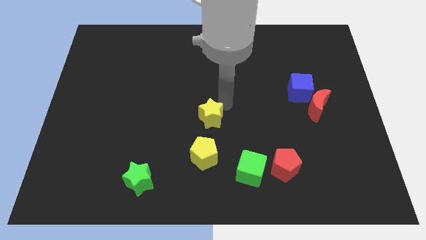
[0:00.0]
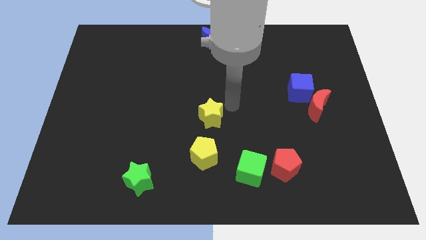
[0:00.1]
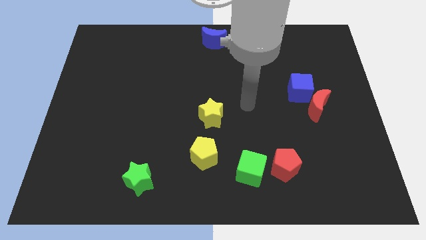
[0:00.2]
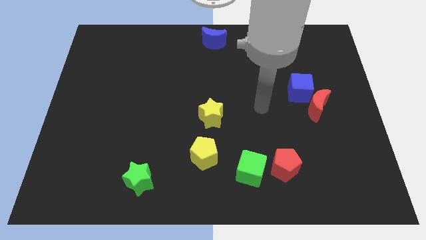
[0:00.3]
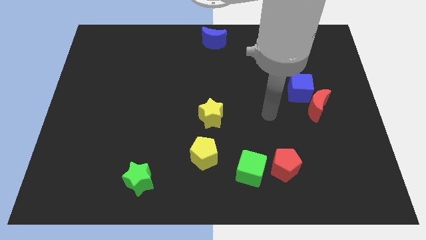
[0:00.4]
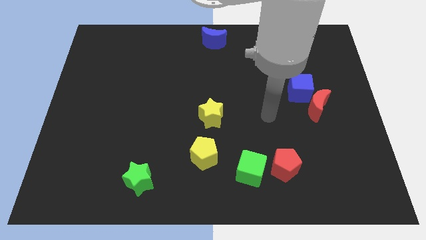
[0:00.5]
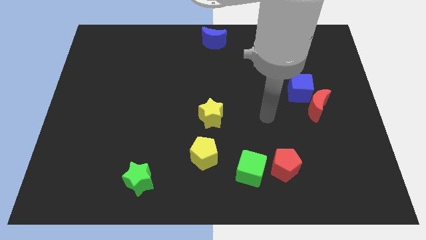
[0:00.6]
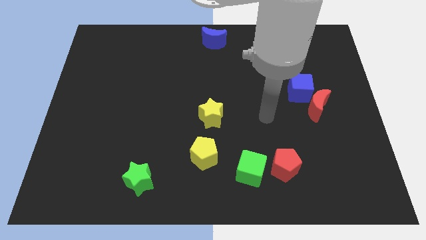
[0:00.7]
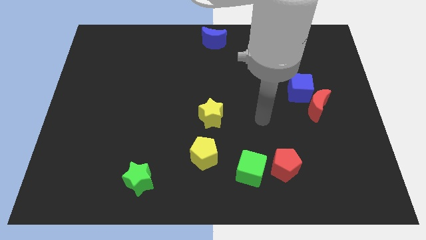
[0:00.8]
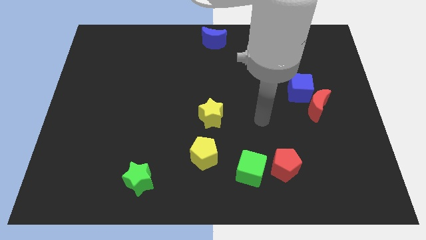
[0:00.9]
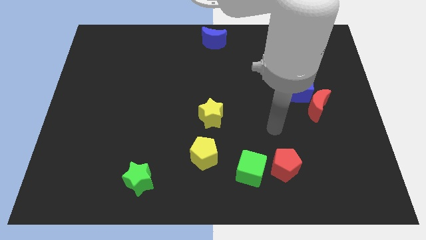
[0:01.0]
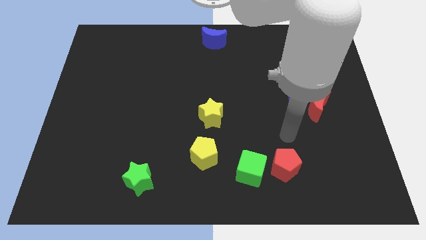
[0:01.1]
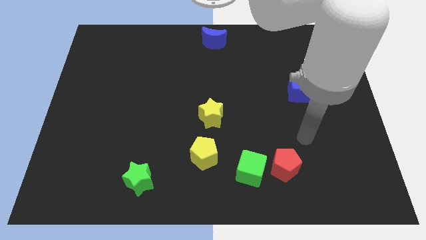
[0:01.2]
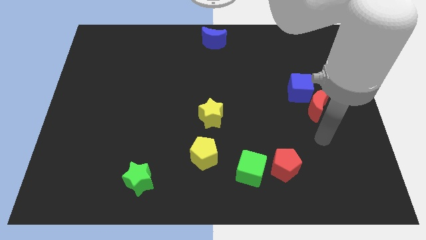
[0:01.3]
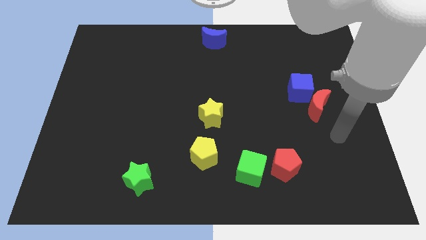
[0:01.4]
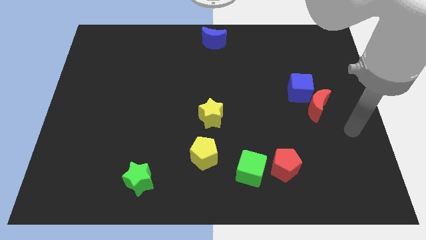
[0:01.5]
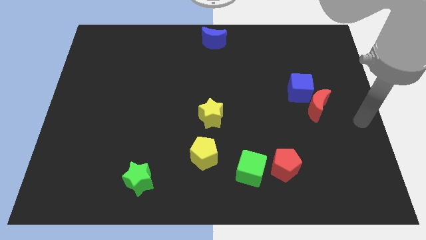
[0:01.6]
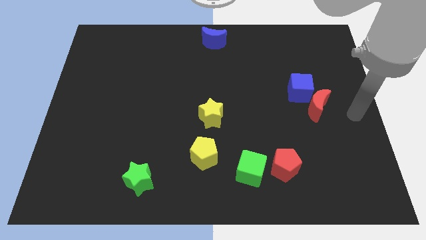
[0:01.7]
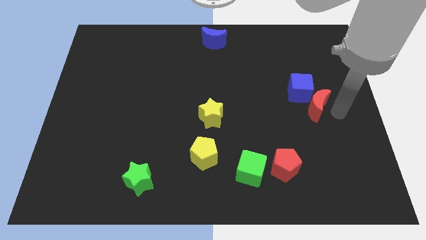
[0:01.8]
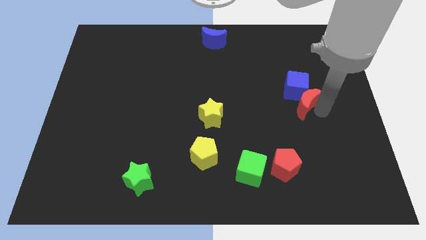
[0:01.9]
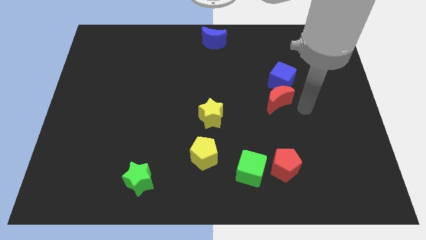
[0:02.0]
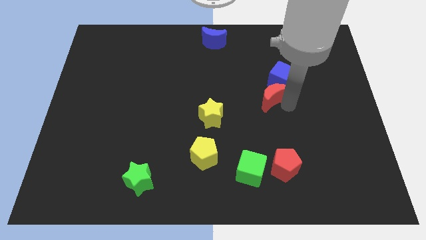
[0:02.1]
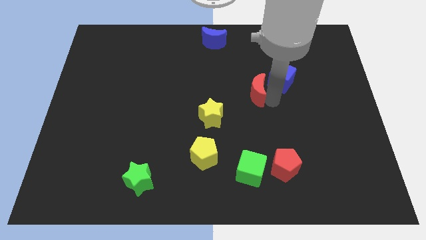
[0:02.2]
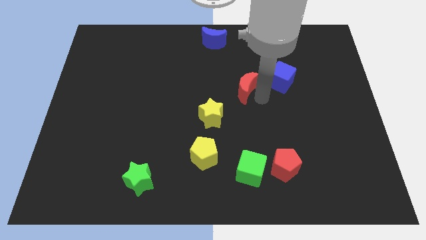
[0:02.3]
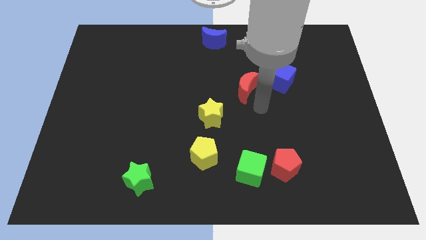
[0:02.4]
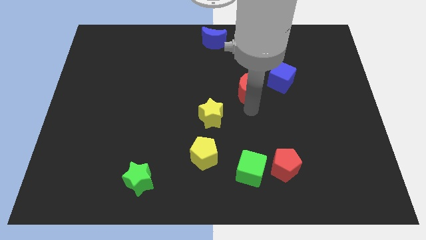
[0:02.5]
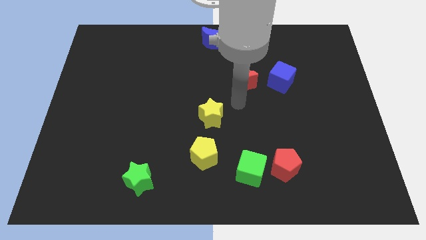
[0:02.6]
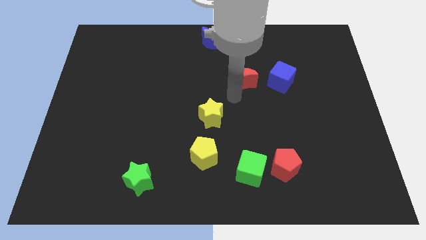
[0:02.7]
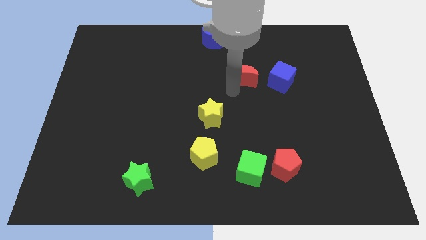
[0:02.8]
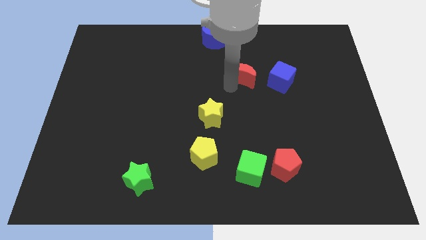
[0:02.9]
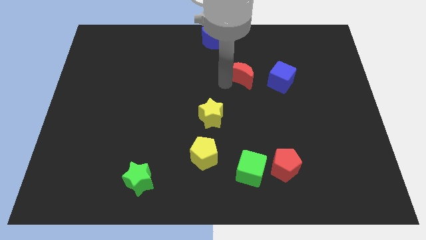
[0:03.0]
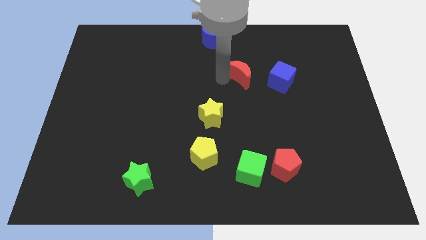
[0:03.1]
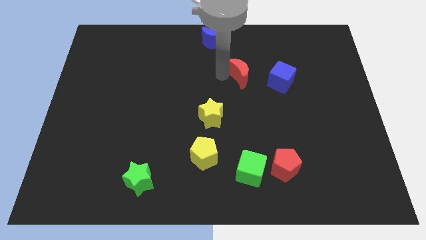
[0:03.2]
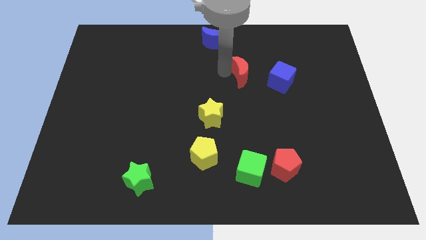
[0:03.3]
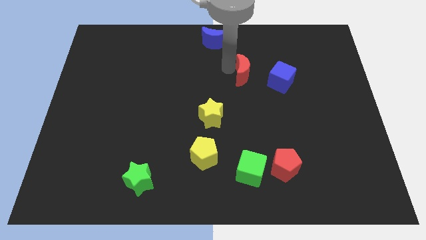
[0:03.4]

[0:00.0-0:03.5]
separate the red moon and blue cube

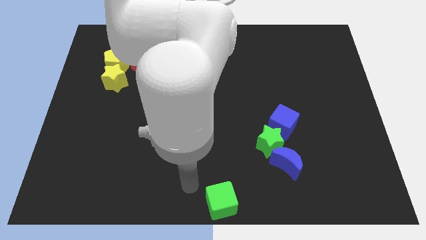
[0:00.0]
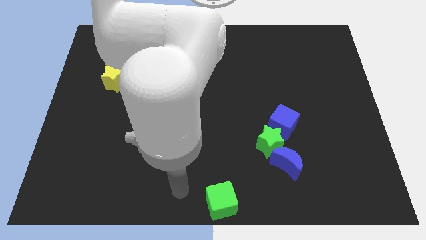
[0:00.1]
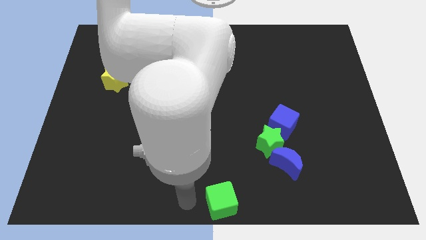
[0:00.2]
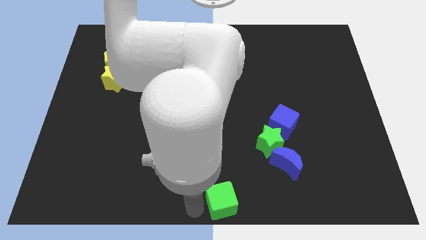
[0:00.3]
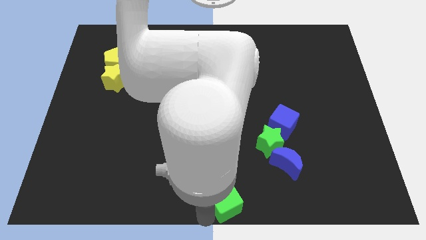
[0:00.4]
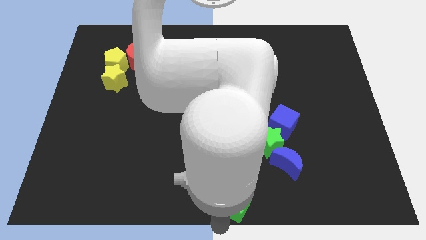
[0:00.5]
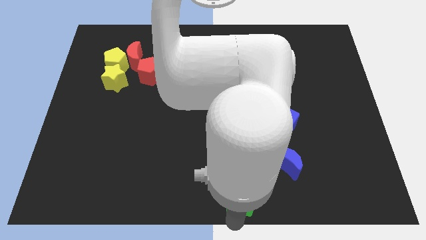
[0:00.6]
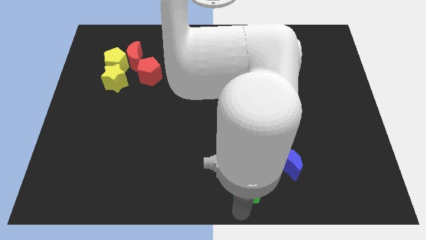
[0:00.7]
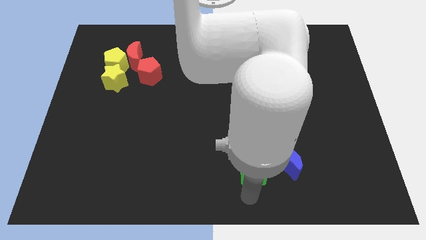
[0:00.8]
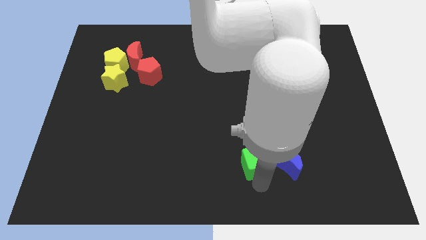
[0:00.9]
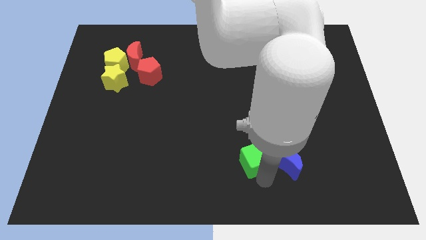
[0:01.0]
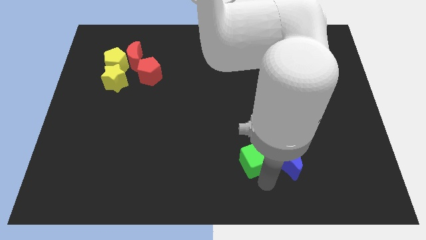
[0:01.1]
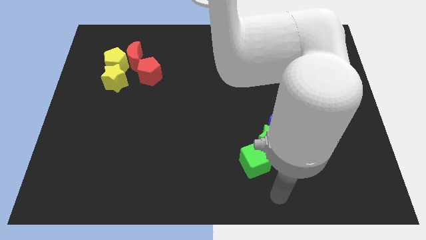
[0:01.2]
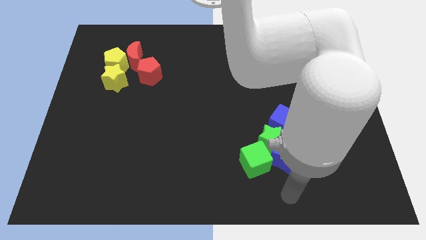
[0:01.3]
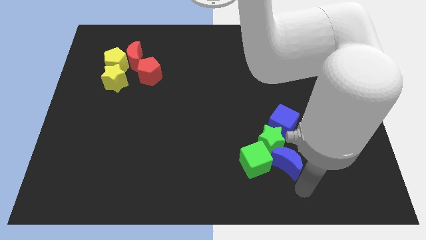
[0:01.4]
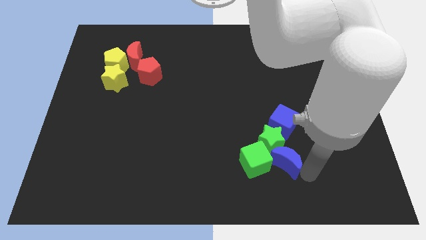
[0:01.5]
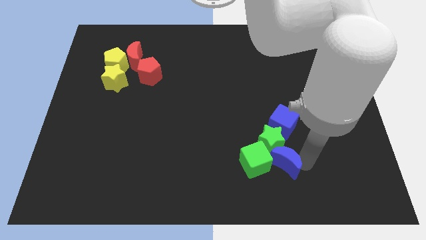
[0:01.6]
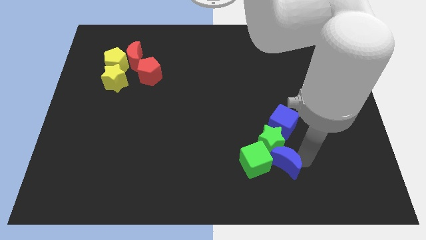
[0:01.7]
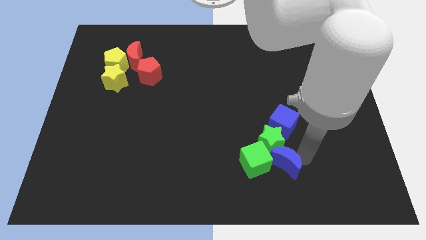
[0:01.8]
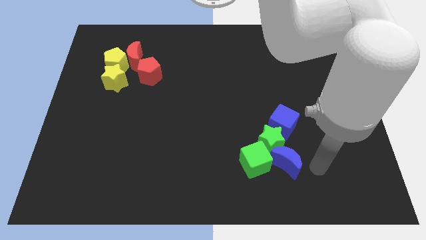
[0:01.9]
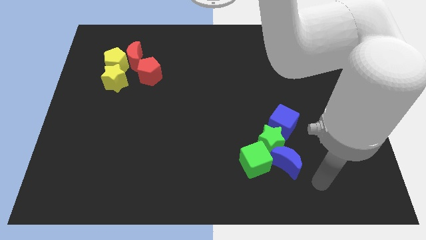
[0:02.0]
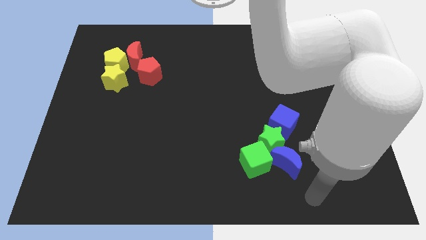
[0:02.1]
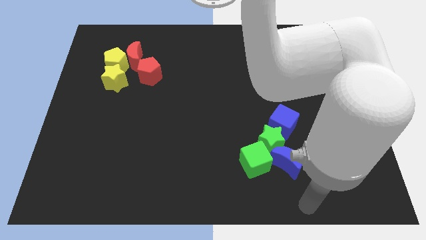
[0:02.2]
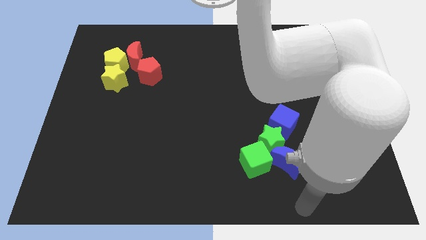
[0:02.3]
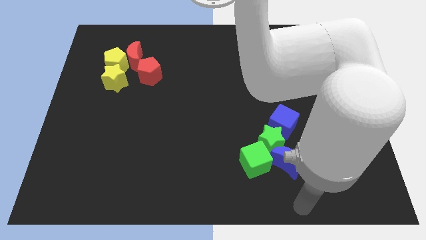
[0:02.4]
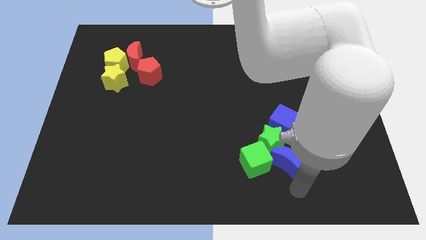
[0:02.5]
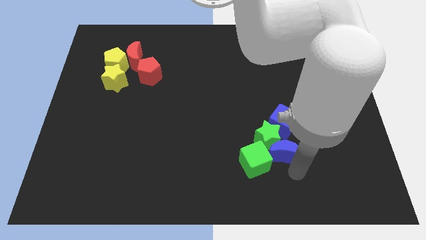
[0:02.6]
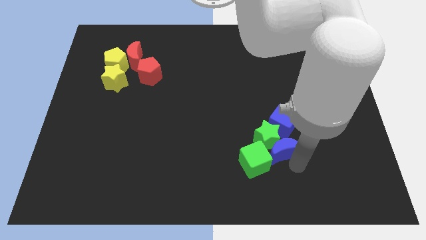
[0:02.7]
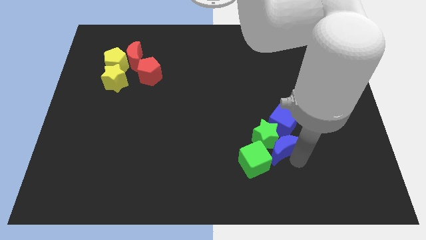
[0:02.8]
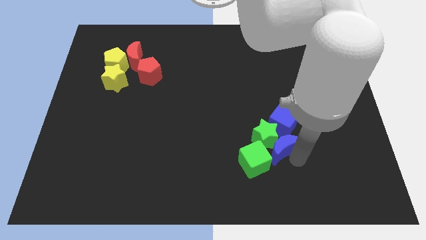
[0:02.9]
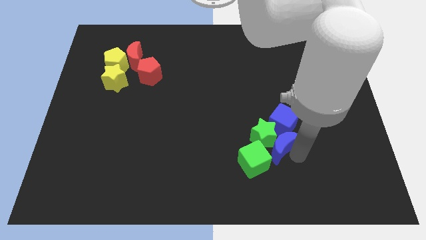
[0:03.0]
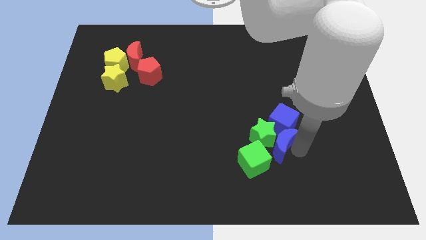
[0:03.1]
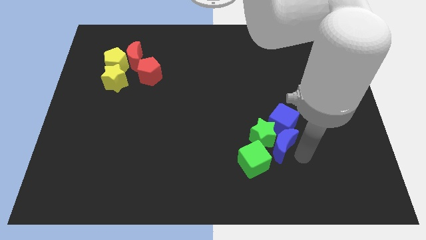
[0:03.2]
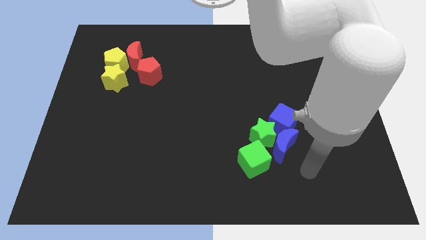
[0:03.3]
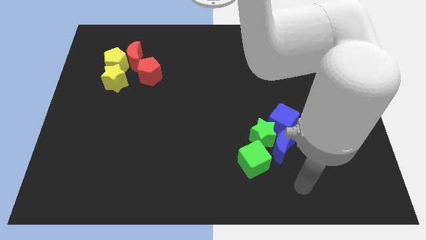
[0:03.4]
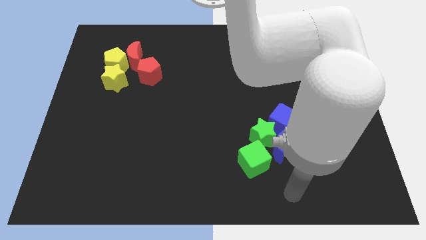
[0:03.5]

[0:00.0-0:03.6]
push the green cube and blue moon into a group of blocks

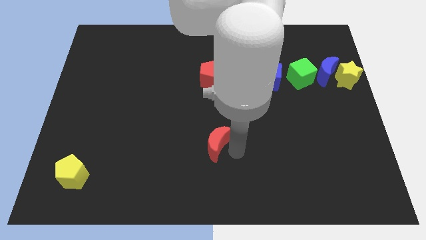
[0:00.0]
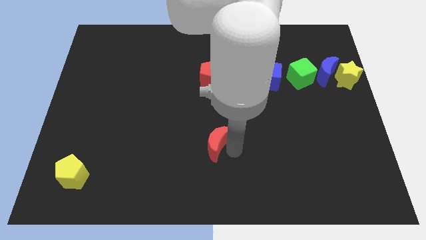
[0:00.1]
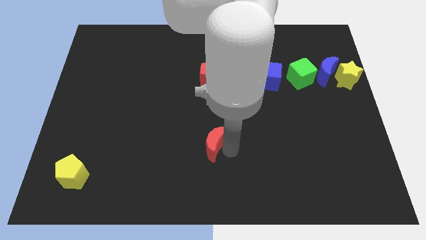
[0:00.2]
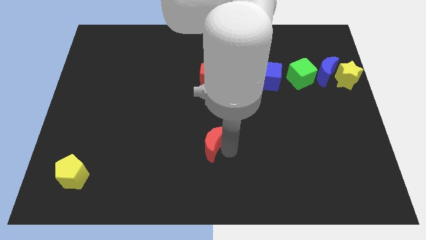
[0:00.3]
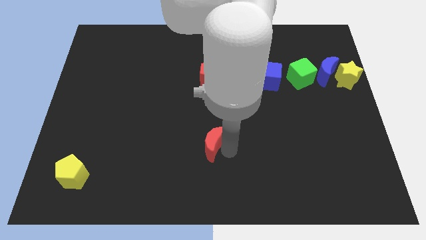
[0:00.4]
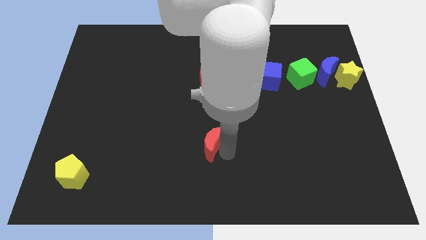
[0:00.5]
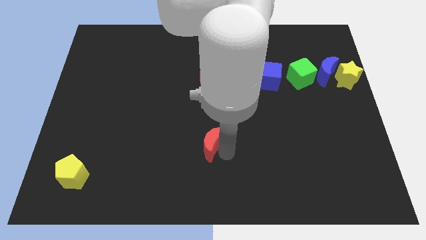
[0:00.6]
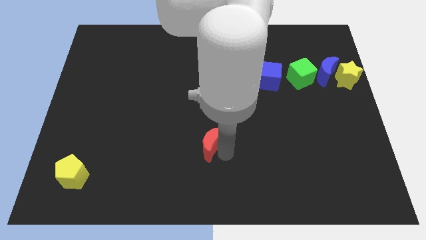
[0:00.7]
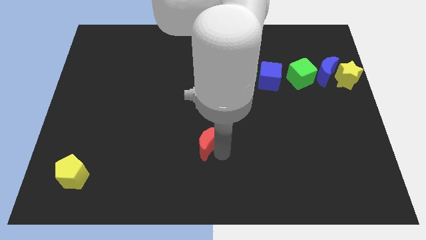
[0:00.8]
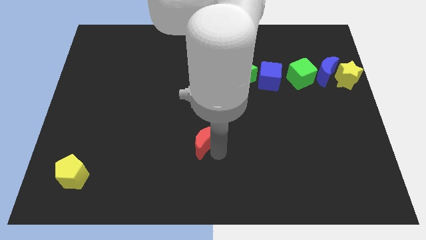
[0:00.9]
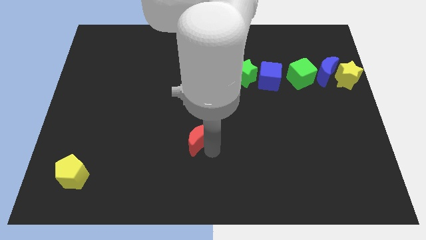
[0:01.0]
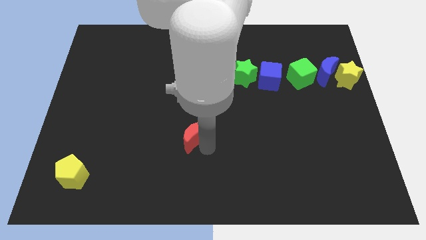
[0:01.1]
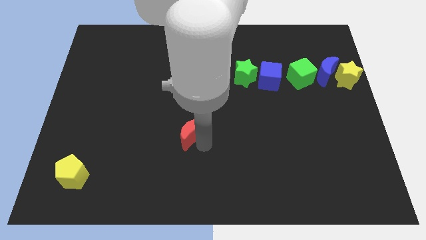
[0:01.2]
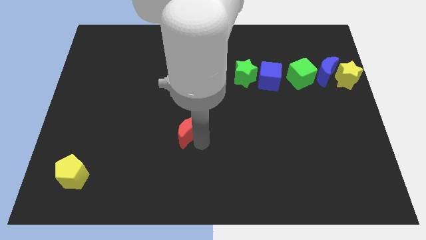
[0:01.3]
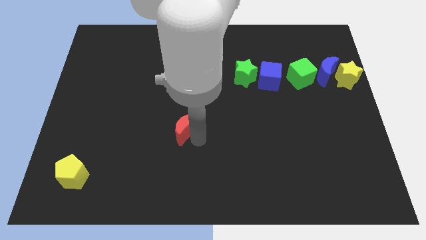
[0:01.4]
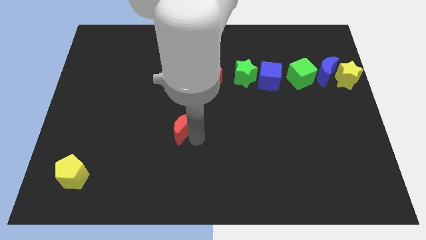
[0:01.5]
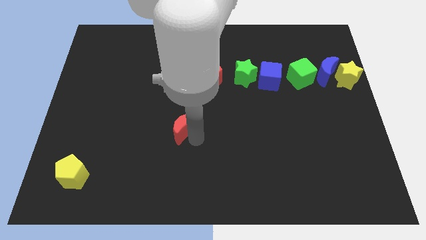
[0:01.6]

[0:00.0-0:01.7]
move the red crescent towards the top
